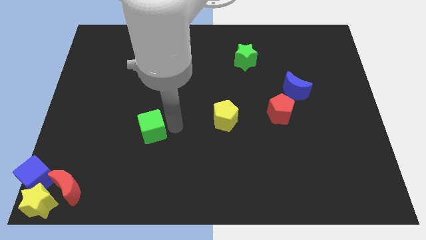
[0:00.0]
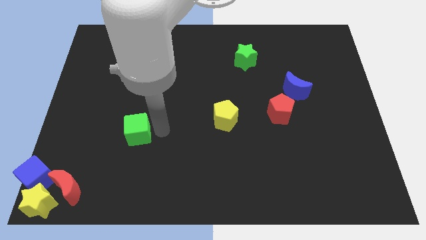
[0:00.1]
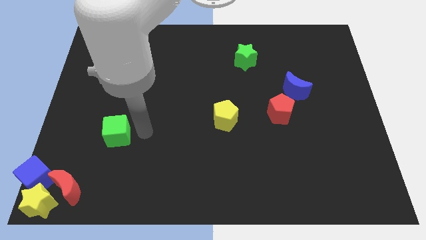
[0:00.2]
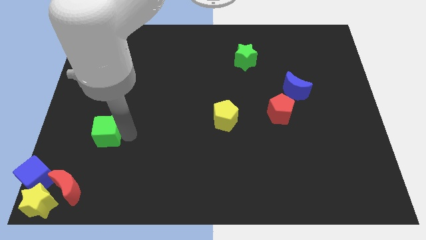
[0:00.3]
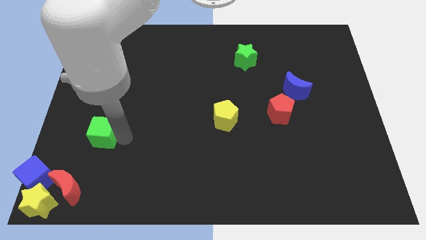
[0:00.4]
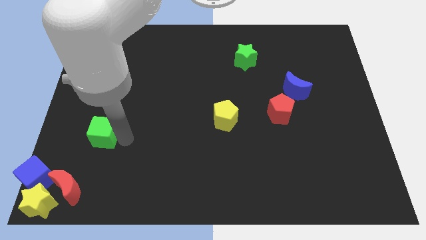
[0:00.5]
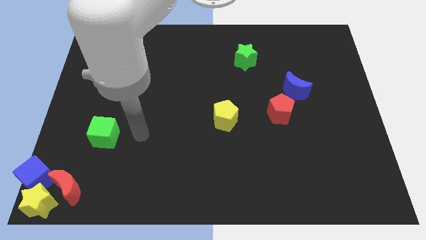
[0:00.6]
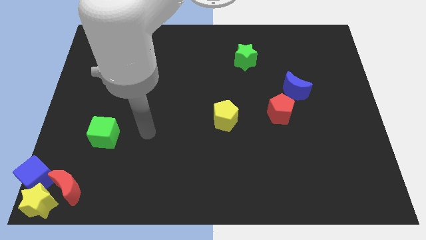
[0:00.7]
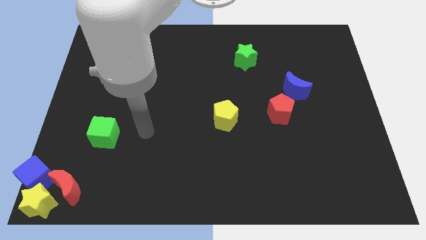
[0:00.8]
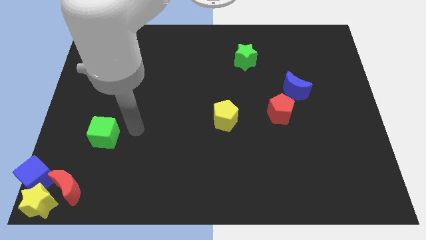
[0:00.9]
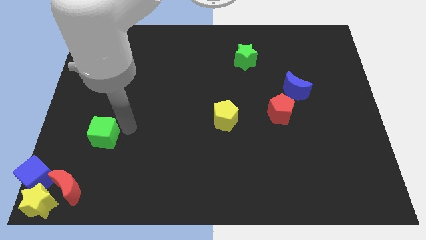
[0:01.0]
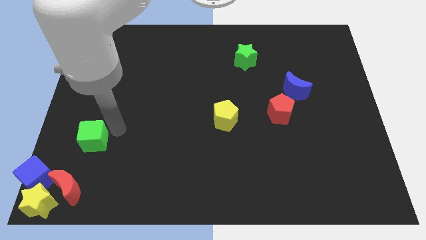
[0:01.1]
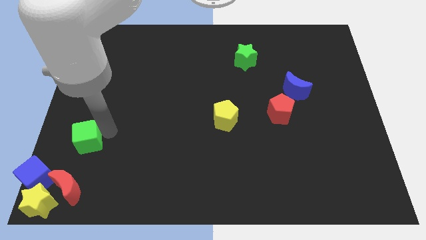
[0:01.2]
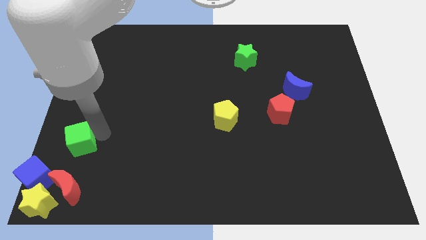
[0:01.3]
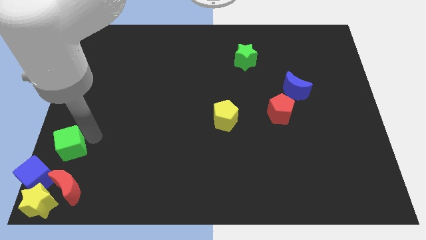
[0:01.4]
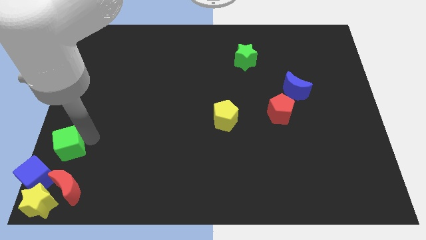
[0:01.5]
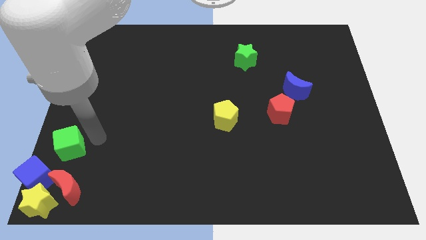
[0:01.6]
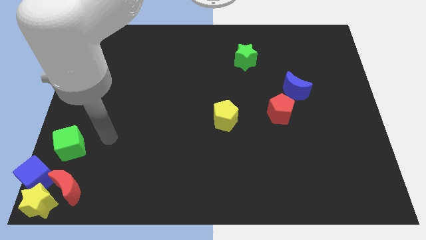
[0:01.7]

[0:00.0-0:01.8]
move the green cube above the red moon

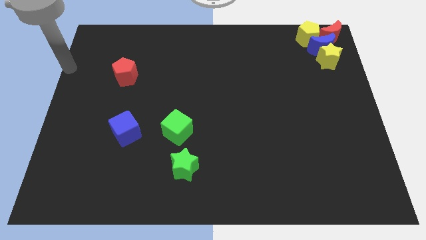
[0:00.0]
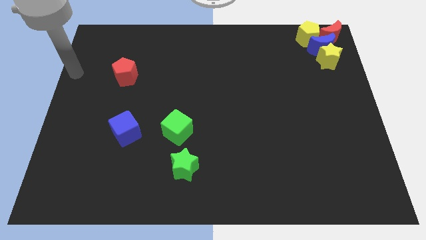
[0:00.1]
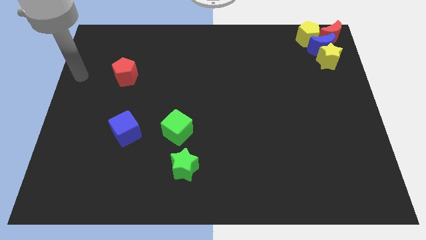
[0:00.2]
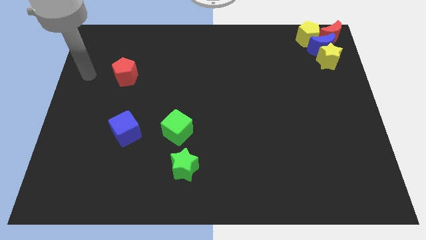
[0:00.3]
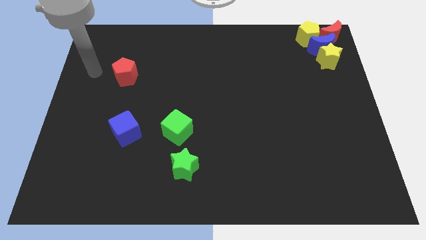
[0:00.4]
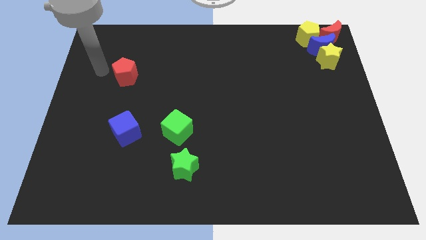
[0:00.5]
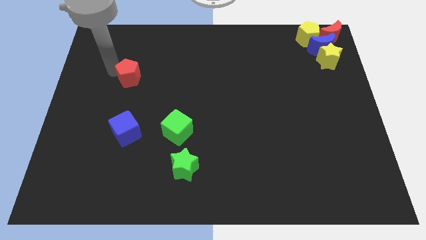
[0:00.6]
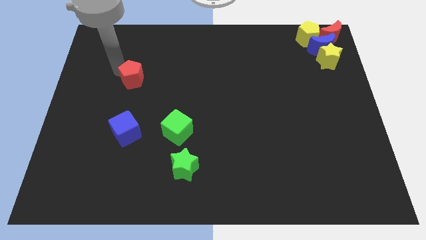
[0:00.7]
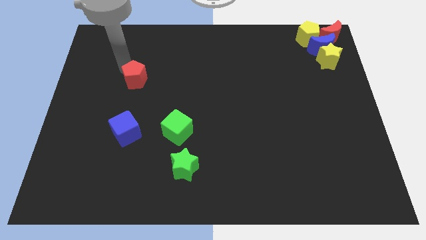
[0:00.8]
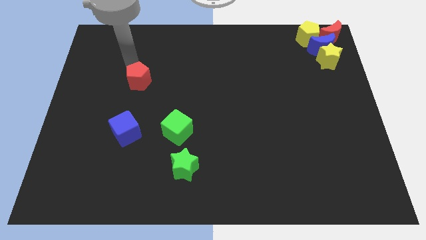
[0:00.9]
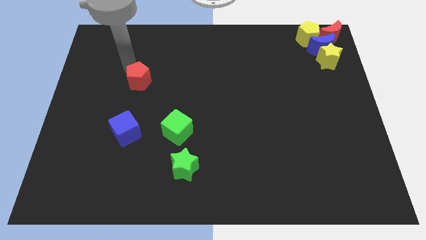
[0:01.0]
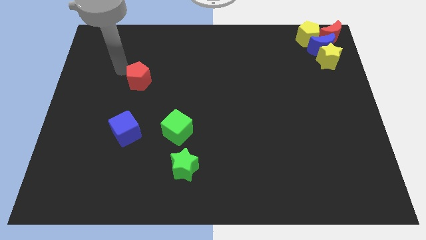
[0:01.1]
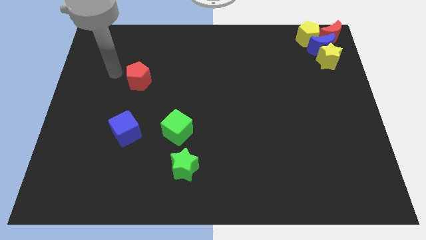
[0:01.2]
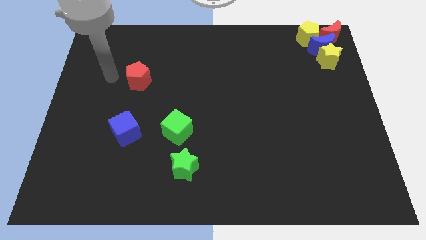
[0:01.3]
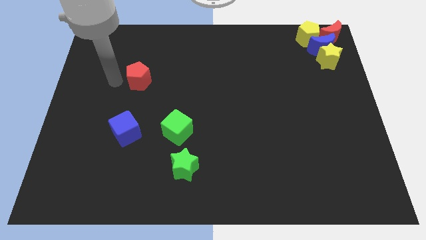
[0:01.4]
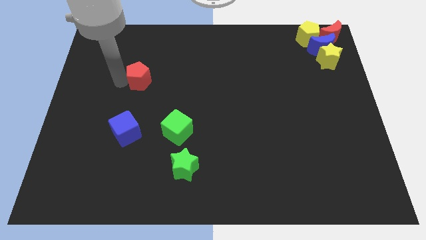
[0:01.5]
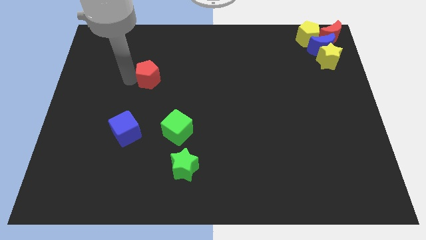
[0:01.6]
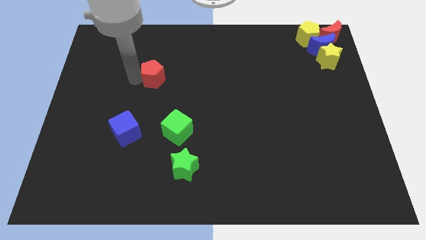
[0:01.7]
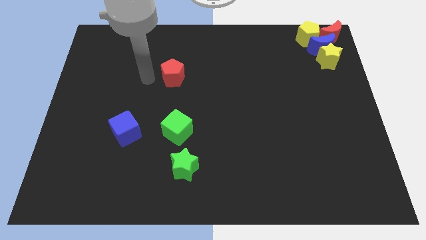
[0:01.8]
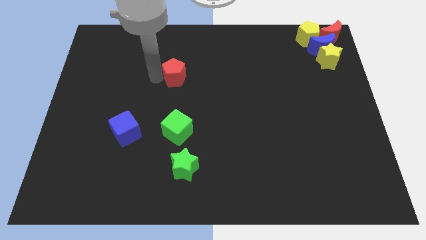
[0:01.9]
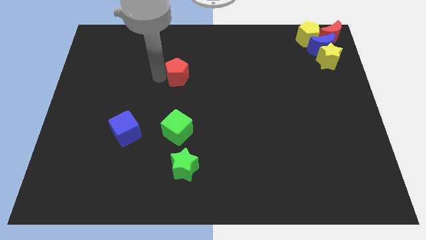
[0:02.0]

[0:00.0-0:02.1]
push the red pentagon to the top of the green cube

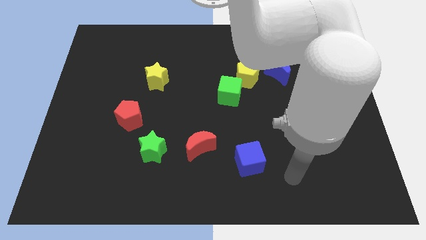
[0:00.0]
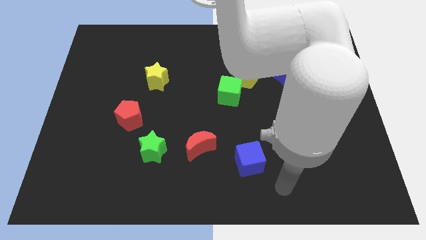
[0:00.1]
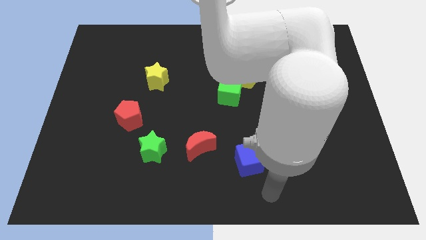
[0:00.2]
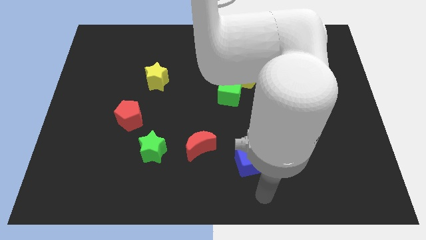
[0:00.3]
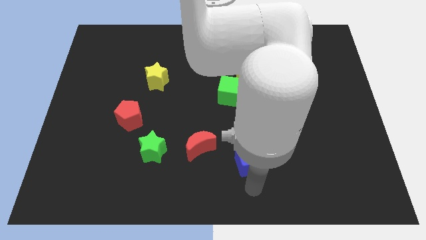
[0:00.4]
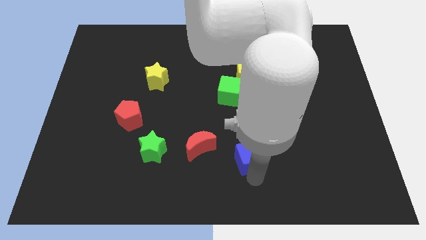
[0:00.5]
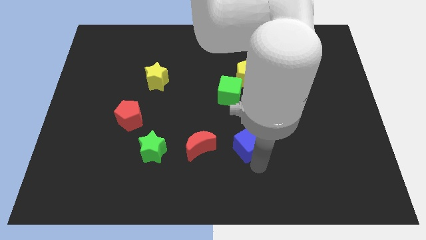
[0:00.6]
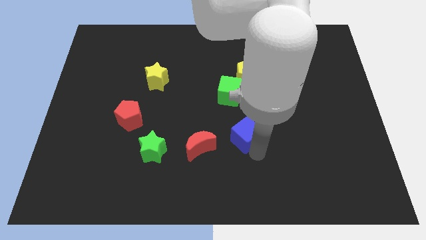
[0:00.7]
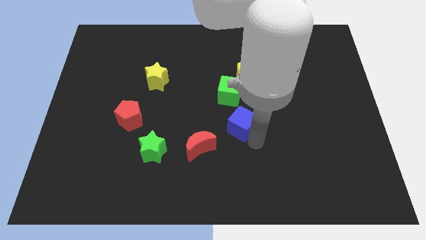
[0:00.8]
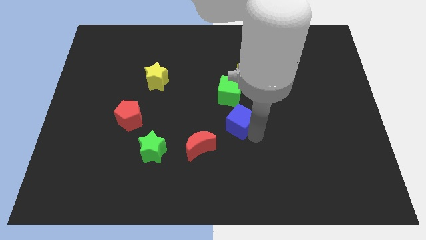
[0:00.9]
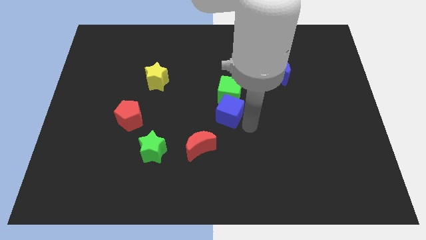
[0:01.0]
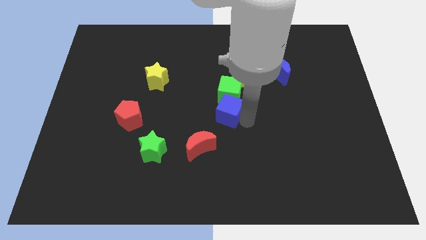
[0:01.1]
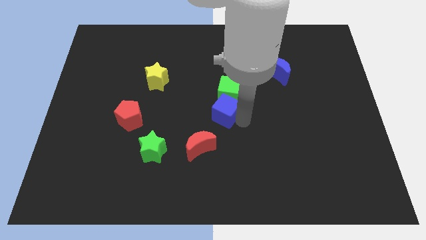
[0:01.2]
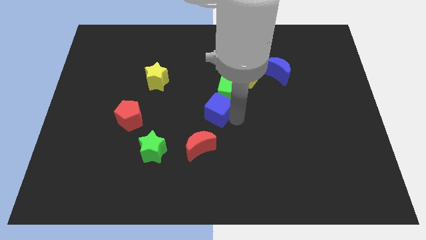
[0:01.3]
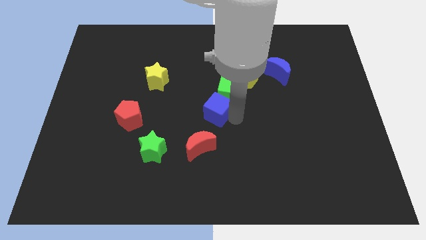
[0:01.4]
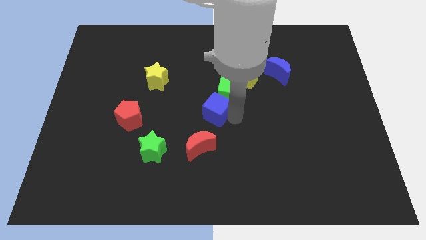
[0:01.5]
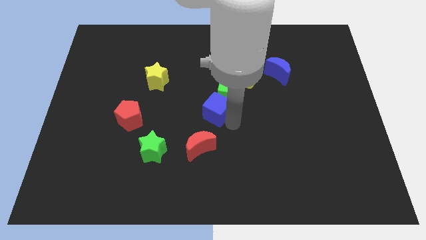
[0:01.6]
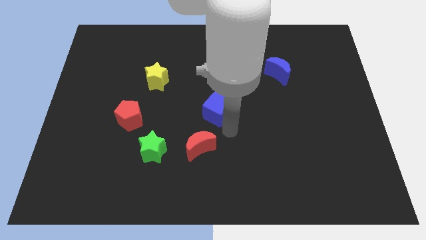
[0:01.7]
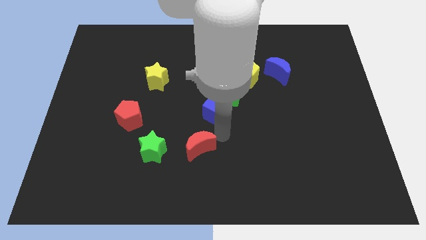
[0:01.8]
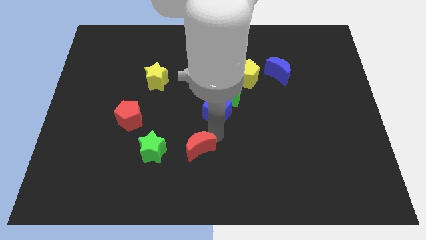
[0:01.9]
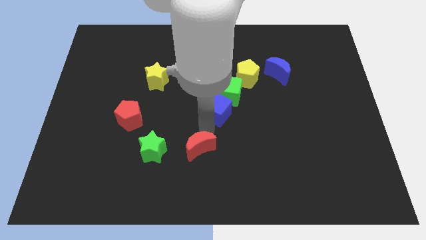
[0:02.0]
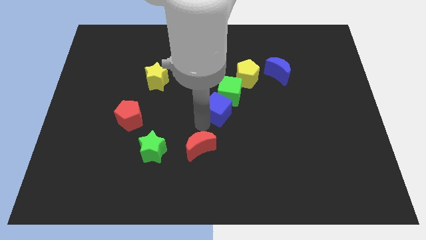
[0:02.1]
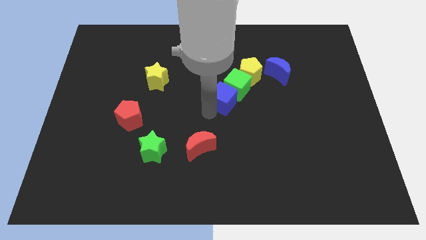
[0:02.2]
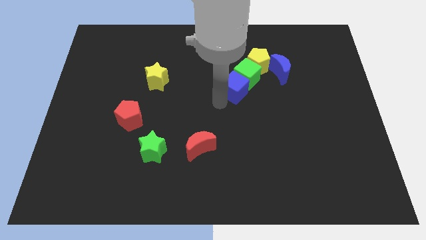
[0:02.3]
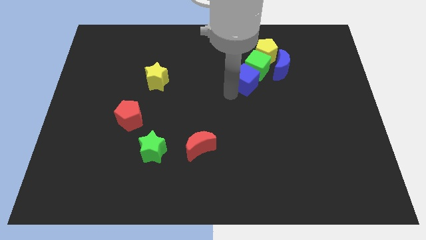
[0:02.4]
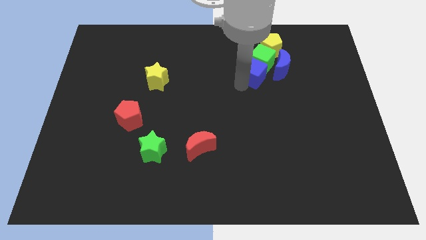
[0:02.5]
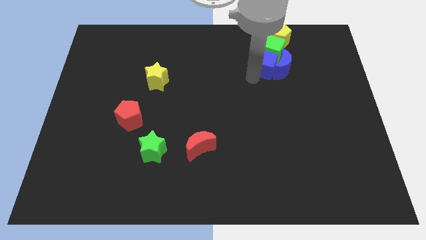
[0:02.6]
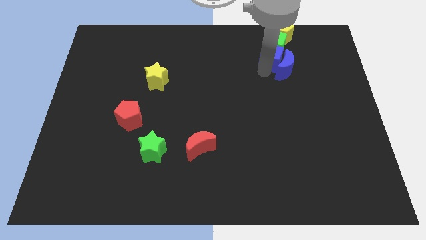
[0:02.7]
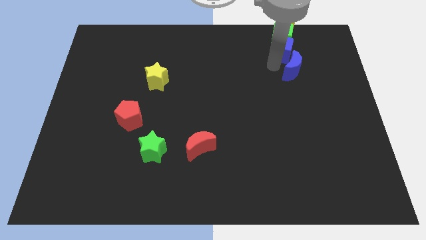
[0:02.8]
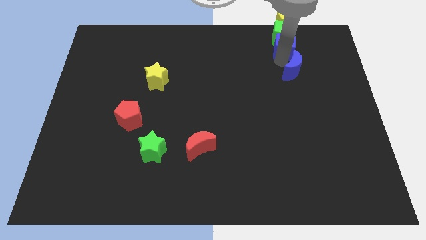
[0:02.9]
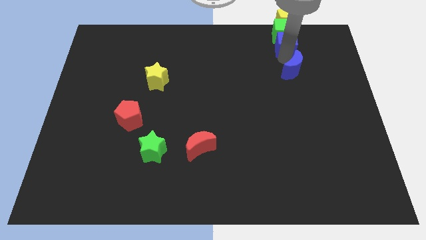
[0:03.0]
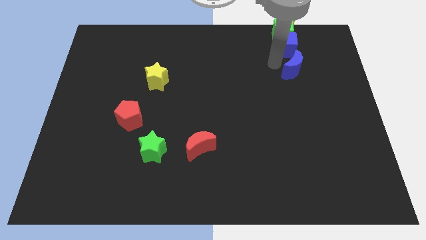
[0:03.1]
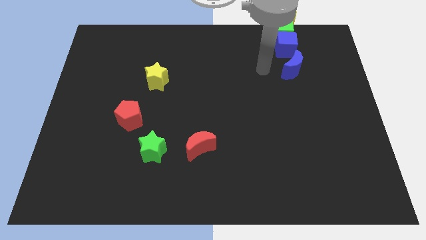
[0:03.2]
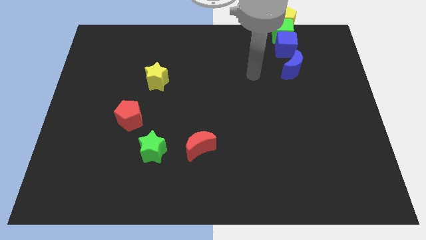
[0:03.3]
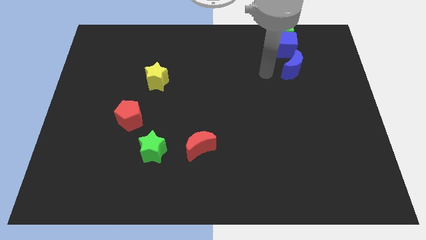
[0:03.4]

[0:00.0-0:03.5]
push the blue cube green cube and the yellow pentagon towards top

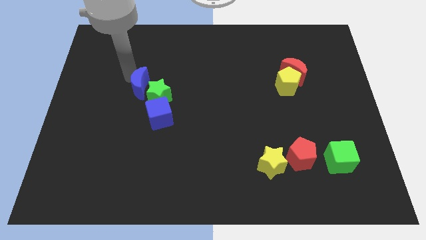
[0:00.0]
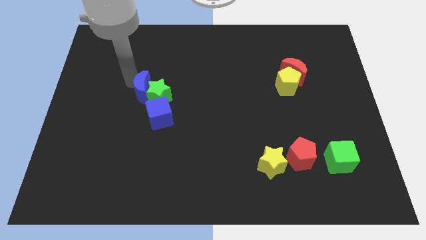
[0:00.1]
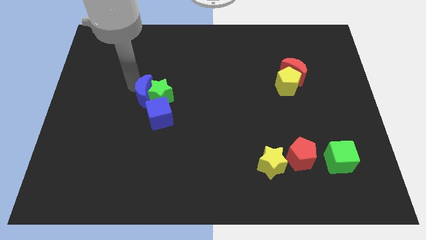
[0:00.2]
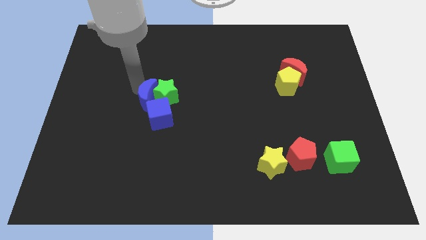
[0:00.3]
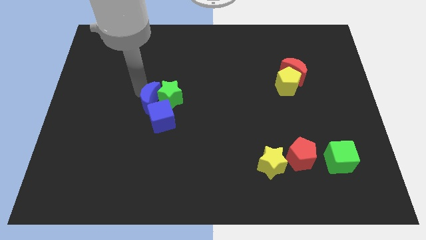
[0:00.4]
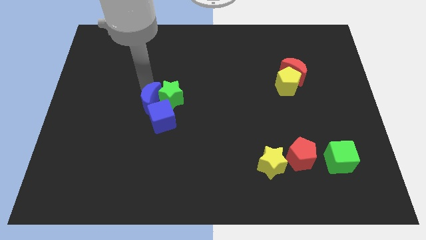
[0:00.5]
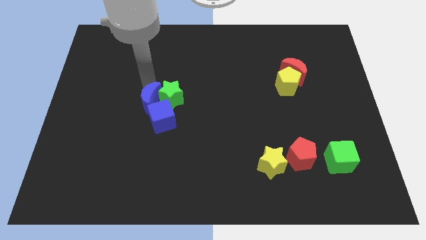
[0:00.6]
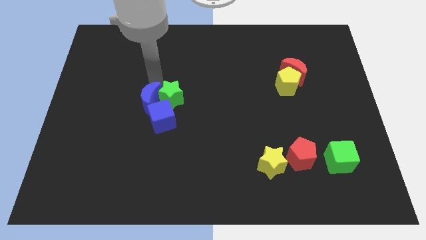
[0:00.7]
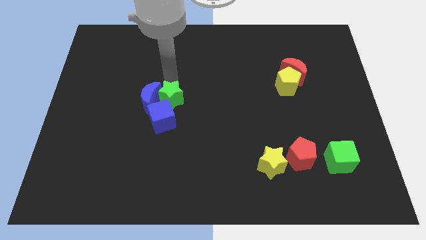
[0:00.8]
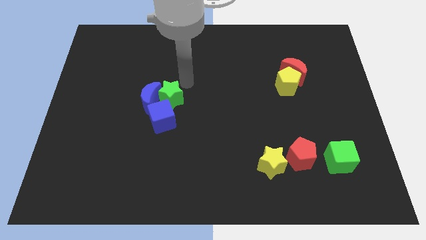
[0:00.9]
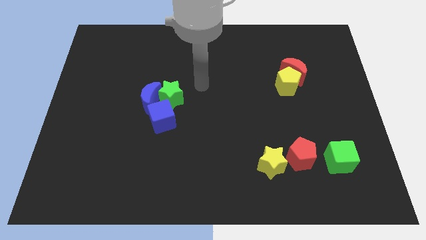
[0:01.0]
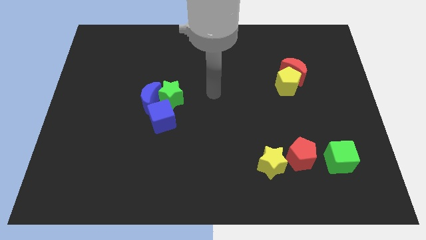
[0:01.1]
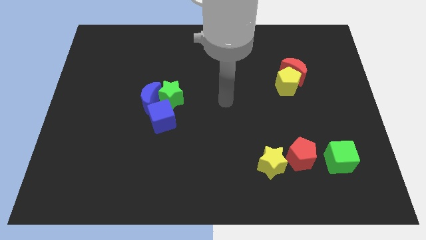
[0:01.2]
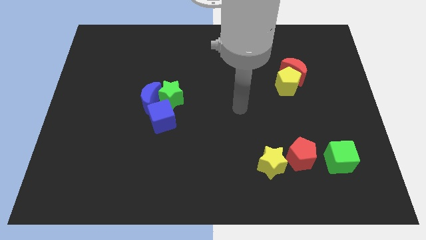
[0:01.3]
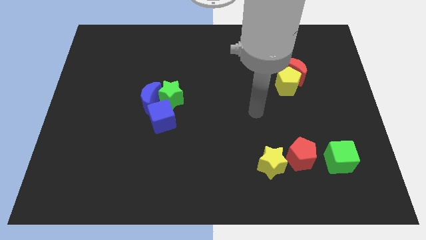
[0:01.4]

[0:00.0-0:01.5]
push the blue moon into green star and the blue cube
